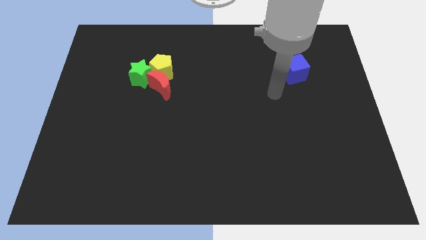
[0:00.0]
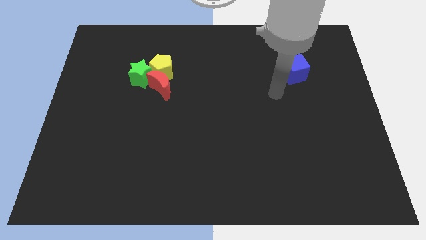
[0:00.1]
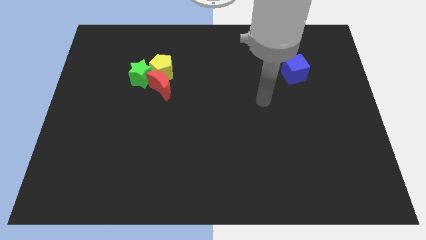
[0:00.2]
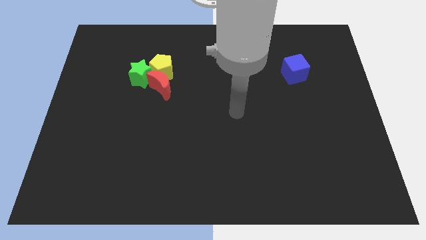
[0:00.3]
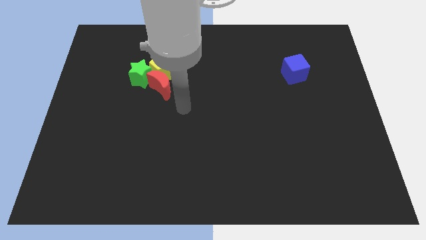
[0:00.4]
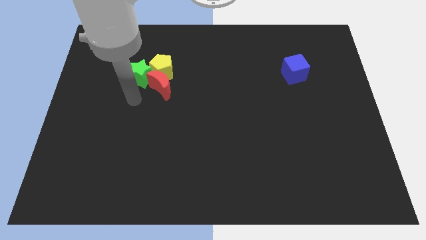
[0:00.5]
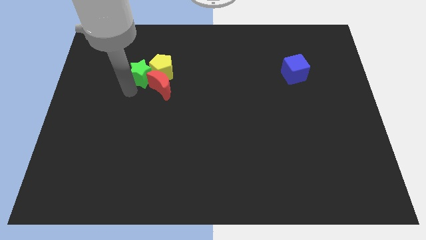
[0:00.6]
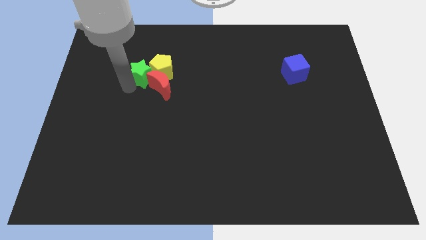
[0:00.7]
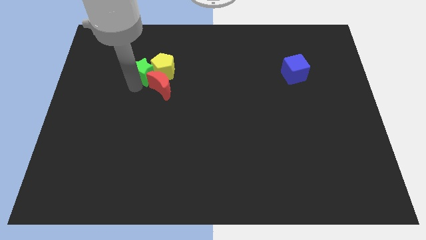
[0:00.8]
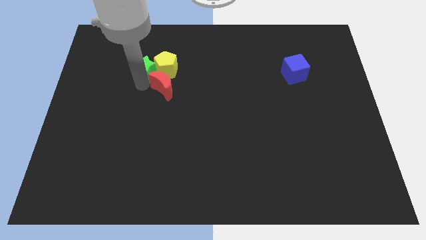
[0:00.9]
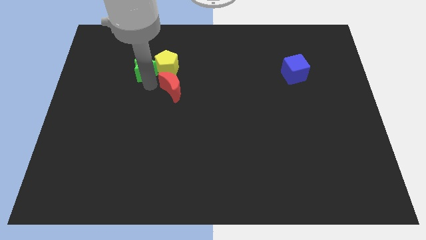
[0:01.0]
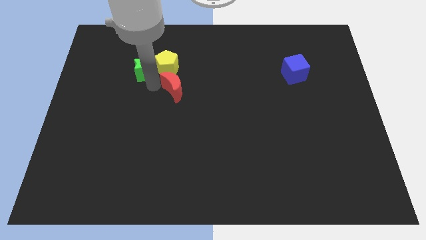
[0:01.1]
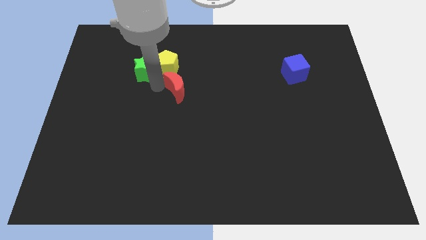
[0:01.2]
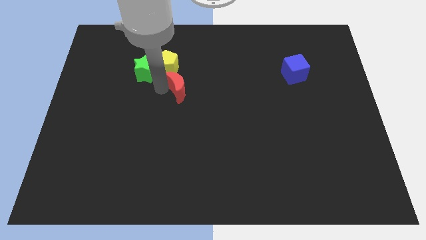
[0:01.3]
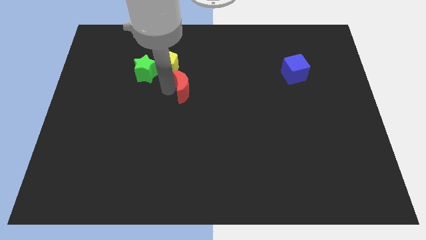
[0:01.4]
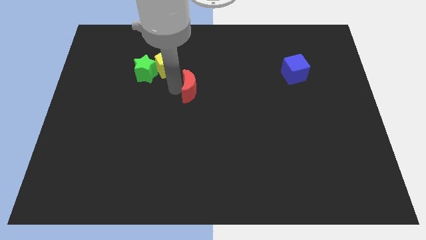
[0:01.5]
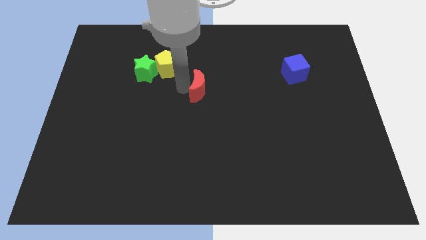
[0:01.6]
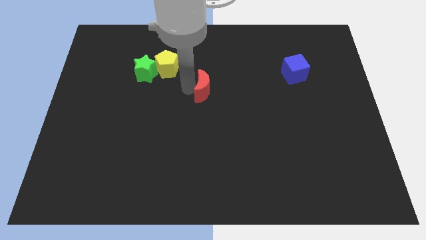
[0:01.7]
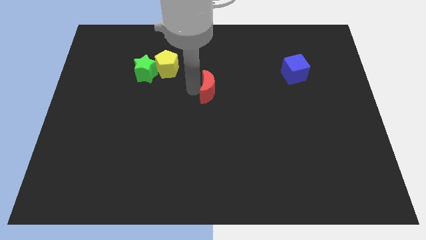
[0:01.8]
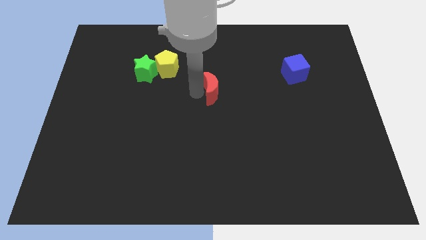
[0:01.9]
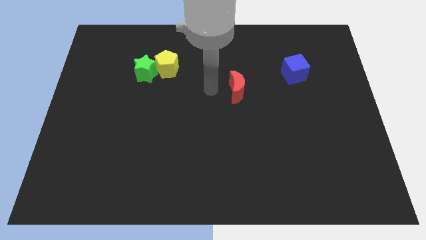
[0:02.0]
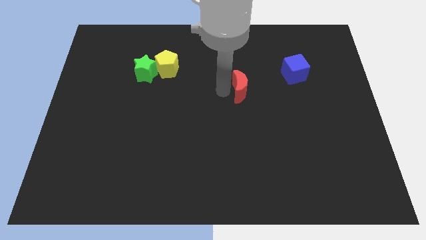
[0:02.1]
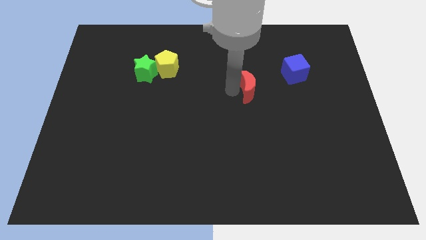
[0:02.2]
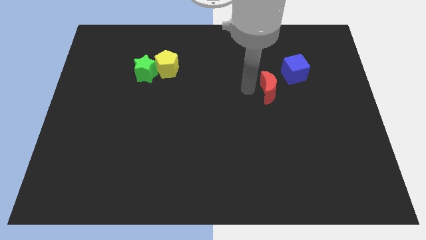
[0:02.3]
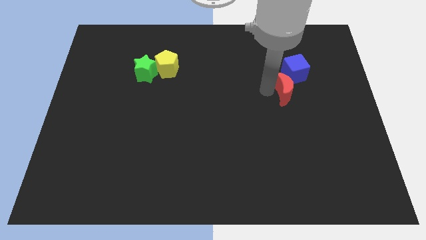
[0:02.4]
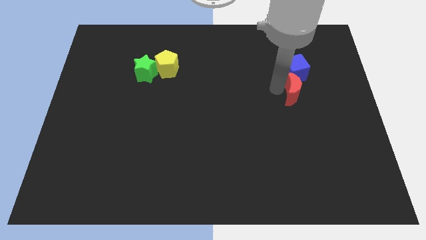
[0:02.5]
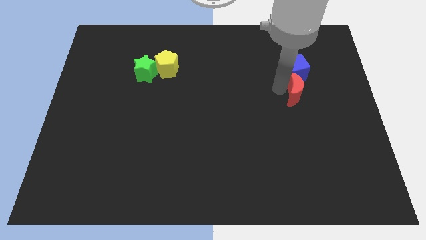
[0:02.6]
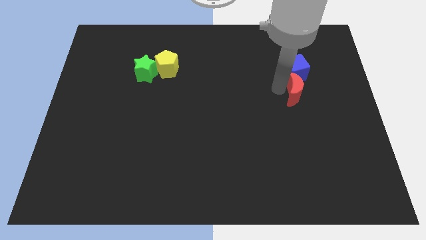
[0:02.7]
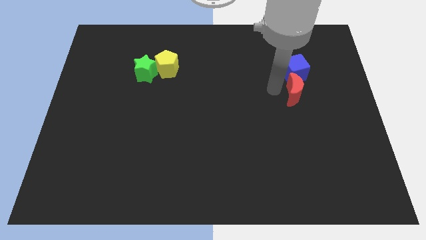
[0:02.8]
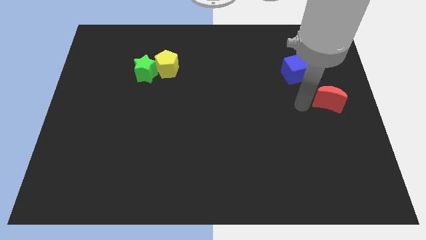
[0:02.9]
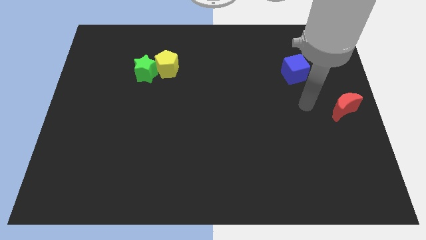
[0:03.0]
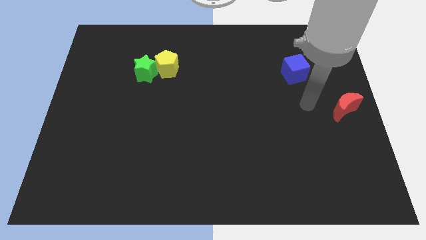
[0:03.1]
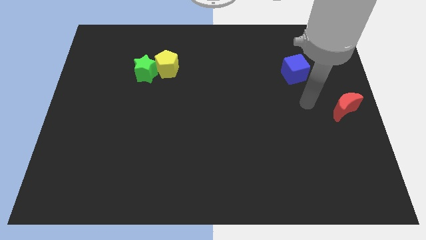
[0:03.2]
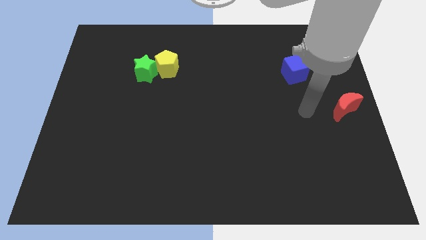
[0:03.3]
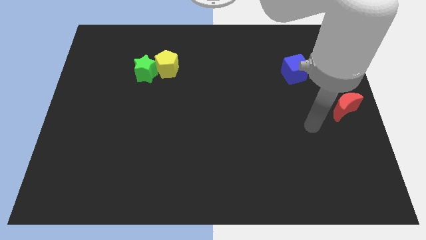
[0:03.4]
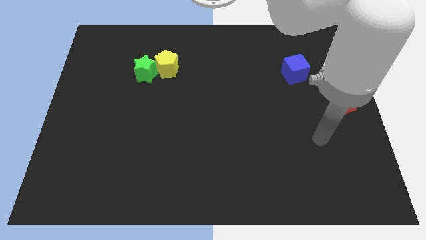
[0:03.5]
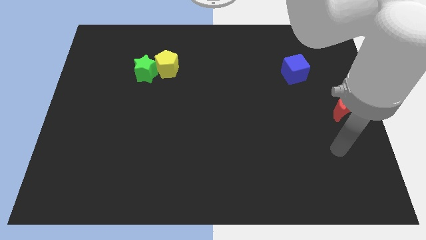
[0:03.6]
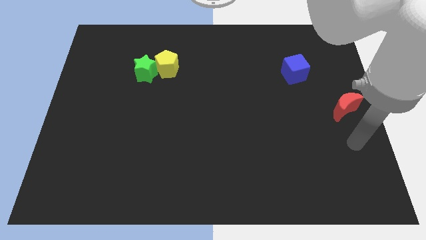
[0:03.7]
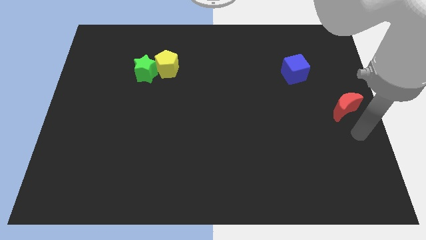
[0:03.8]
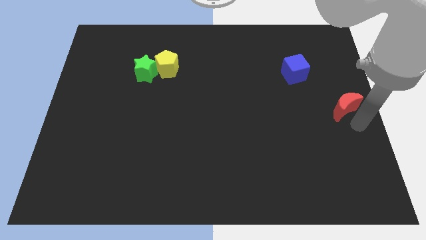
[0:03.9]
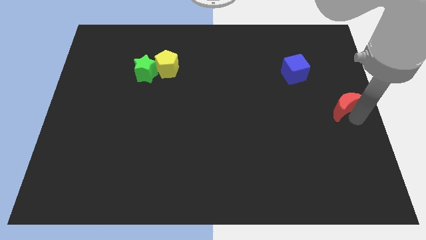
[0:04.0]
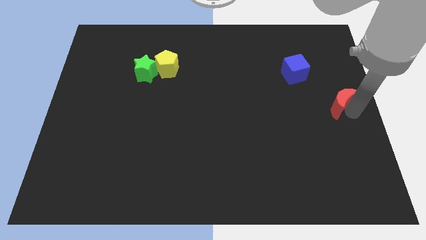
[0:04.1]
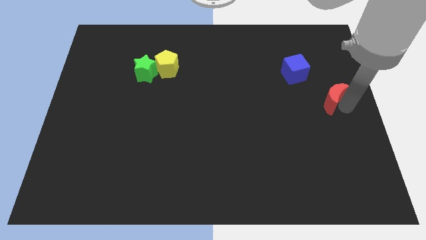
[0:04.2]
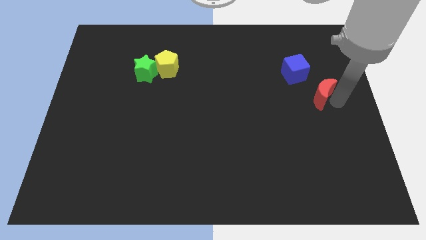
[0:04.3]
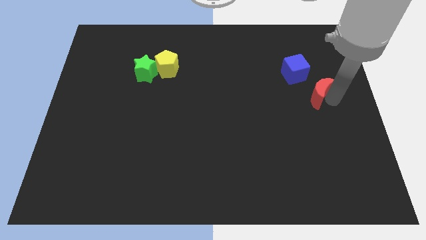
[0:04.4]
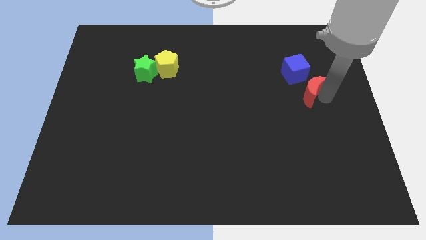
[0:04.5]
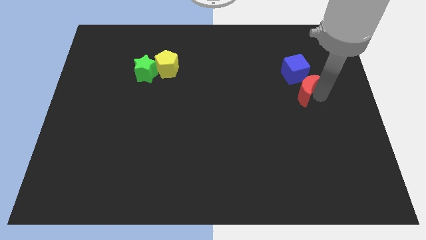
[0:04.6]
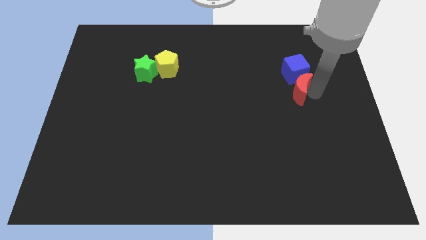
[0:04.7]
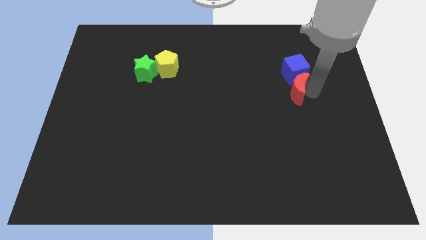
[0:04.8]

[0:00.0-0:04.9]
move the moon to the blue block

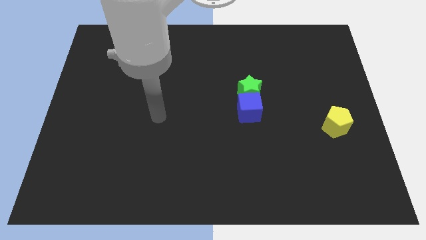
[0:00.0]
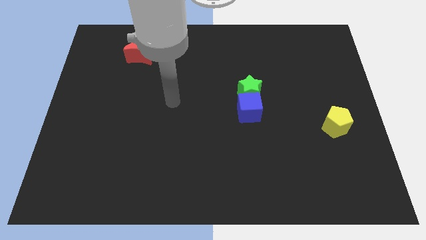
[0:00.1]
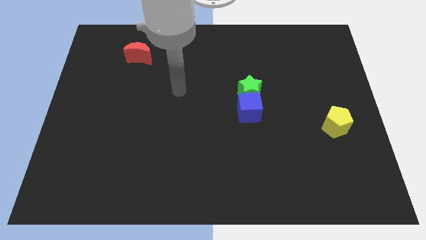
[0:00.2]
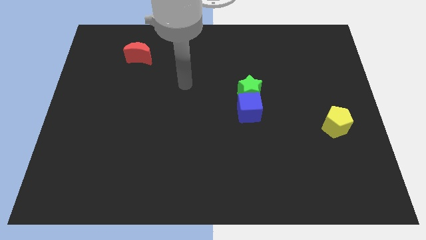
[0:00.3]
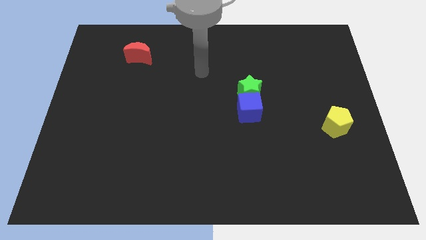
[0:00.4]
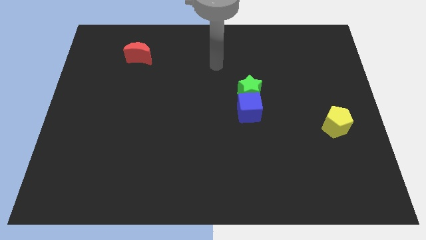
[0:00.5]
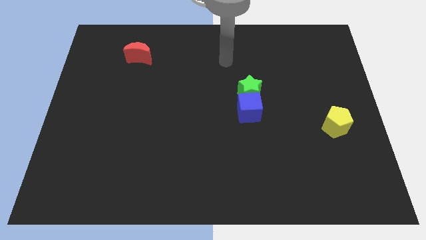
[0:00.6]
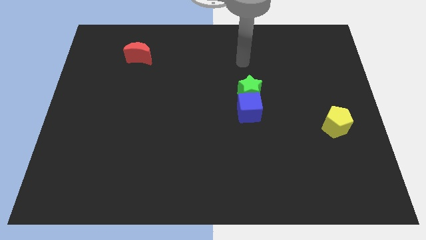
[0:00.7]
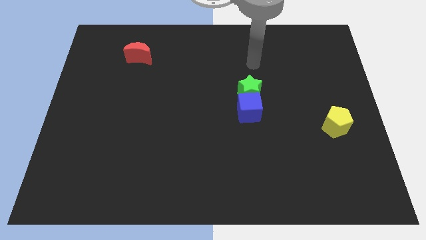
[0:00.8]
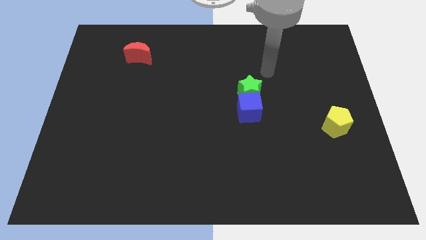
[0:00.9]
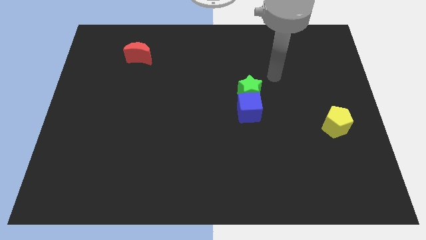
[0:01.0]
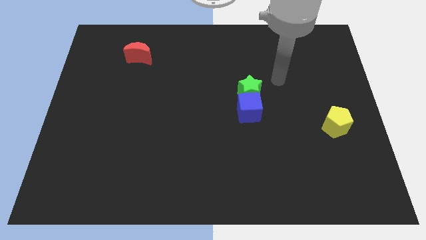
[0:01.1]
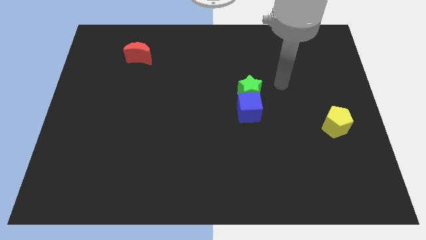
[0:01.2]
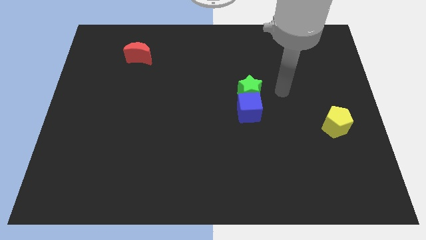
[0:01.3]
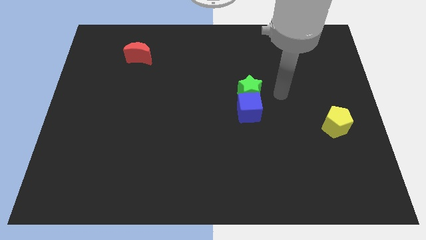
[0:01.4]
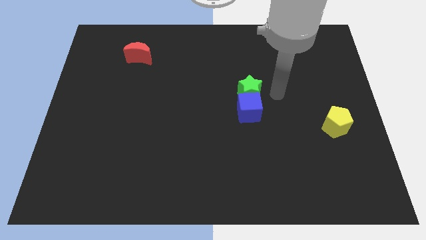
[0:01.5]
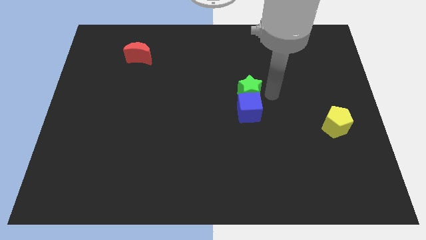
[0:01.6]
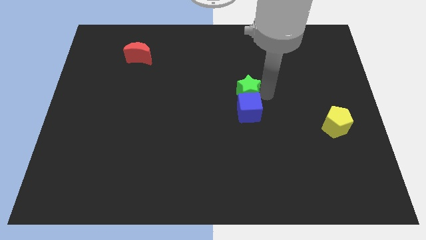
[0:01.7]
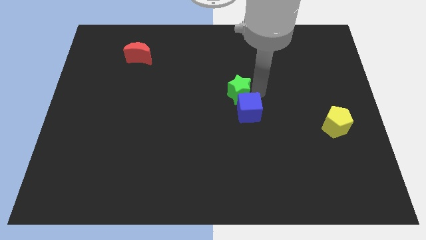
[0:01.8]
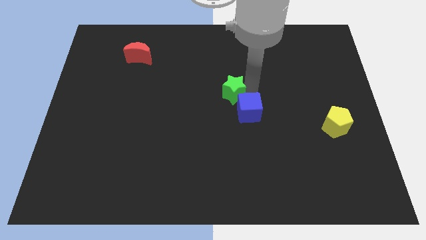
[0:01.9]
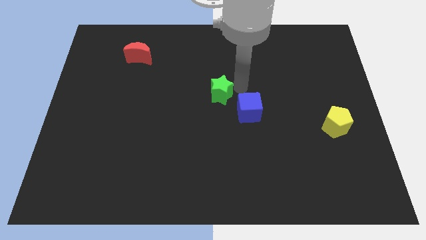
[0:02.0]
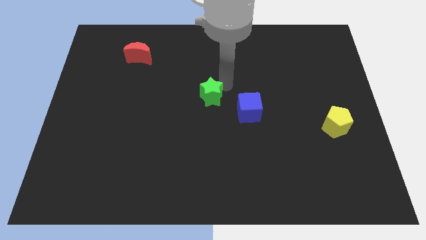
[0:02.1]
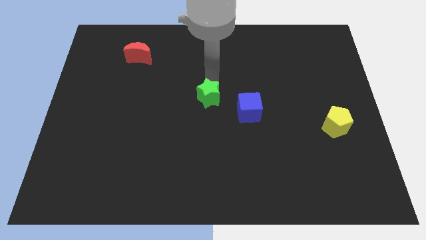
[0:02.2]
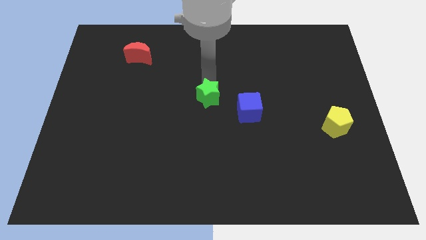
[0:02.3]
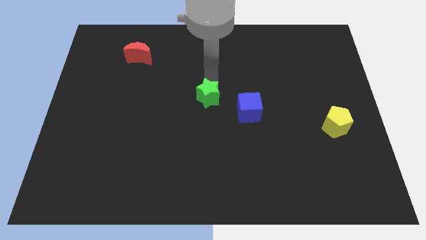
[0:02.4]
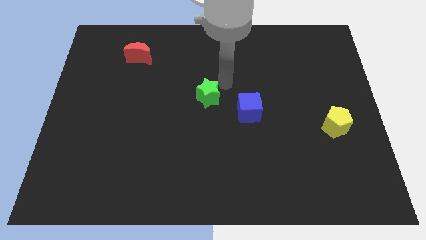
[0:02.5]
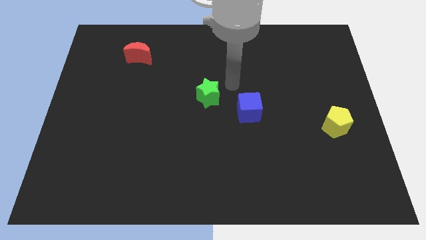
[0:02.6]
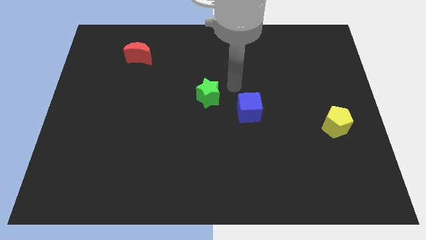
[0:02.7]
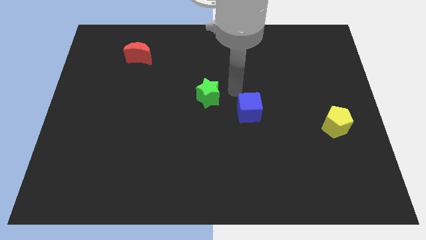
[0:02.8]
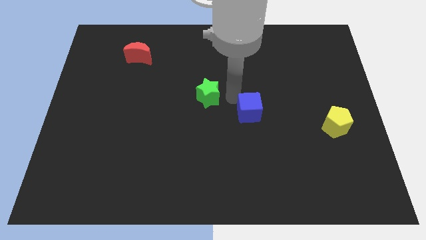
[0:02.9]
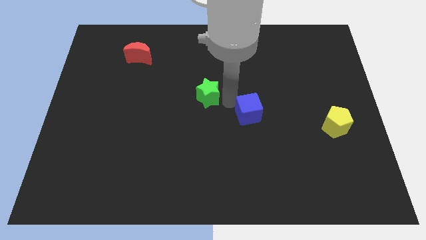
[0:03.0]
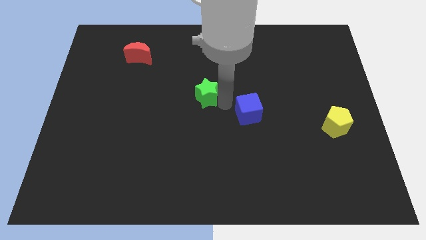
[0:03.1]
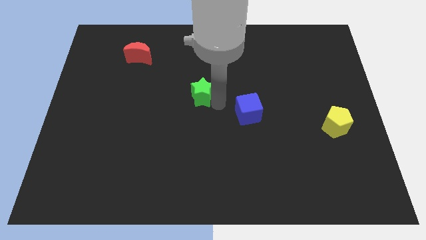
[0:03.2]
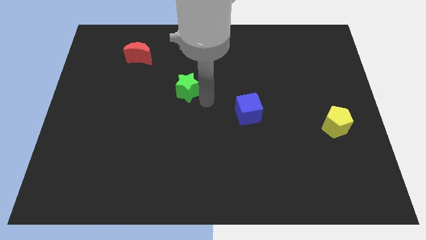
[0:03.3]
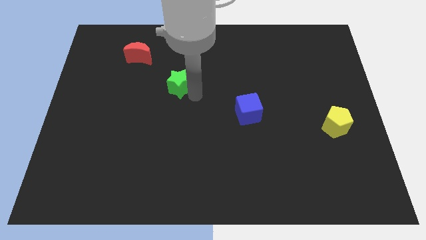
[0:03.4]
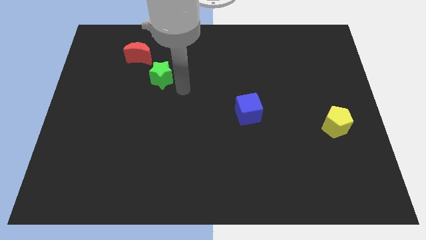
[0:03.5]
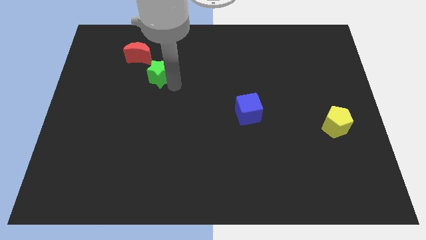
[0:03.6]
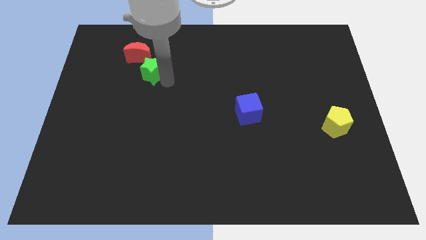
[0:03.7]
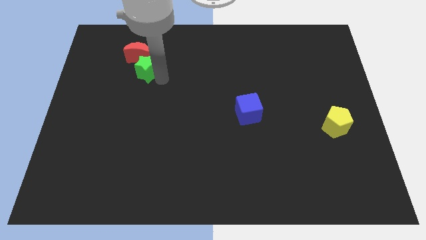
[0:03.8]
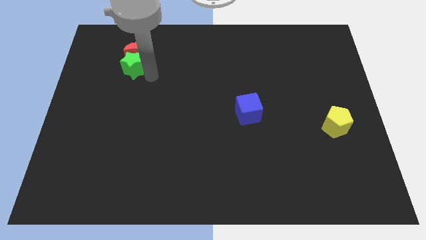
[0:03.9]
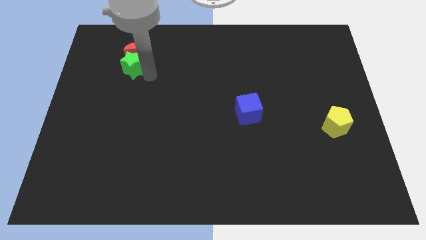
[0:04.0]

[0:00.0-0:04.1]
push the green star towards the red block
